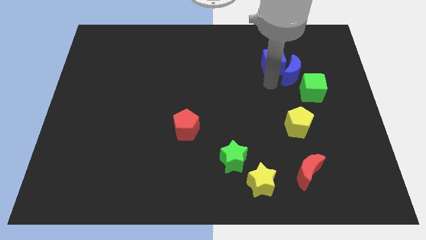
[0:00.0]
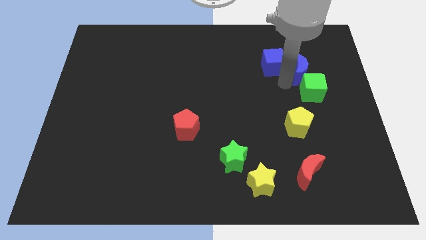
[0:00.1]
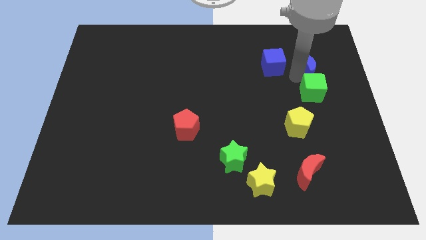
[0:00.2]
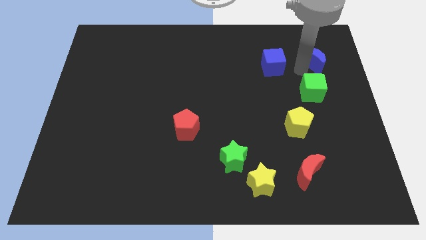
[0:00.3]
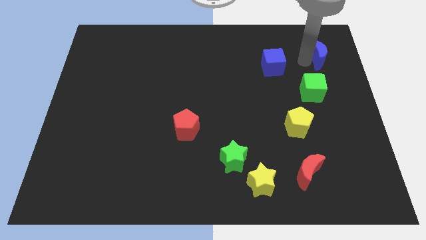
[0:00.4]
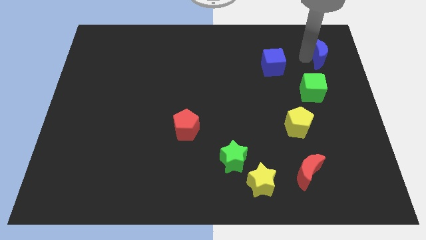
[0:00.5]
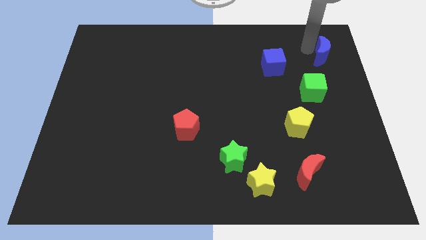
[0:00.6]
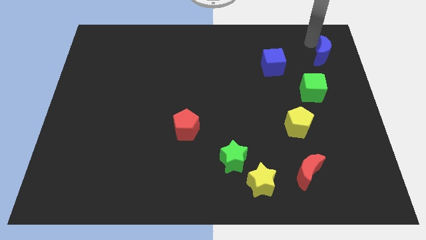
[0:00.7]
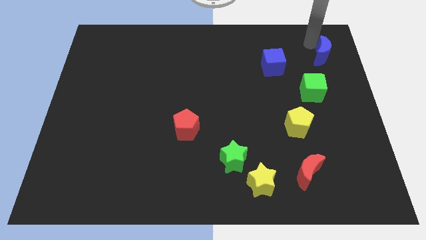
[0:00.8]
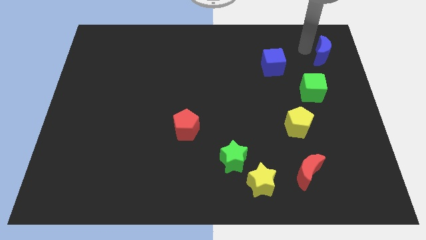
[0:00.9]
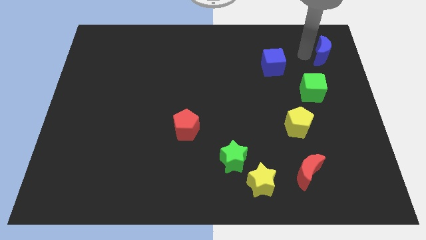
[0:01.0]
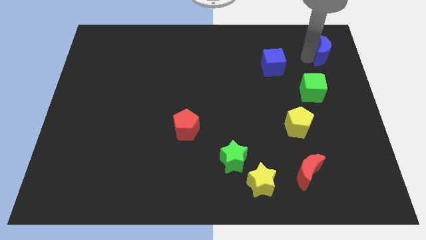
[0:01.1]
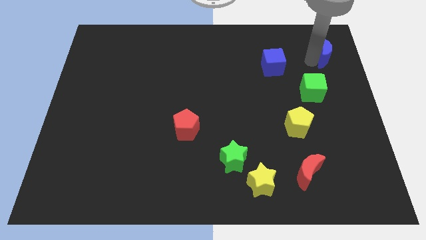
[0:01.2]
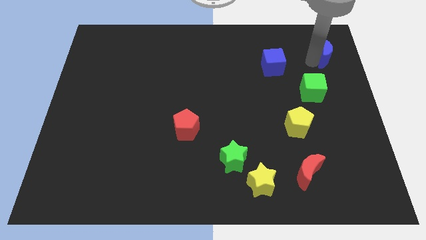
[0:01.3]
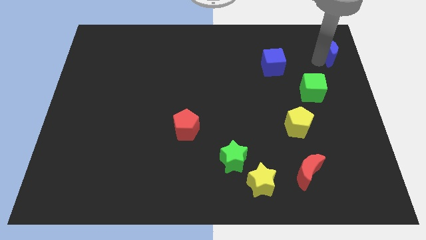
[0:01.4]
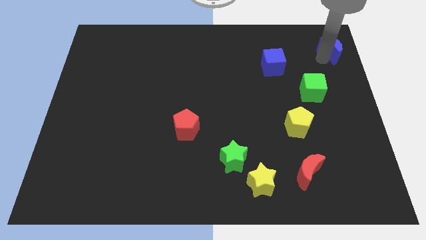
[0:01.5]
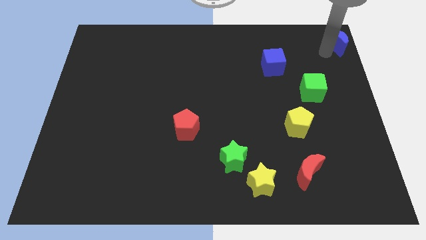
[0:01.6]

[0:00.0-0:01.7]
separate the blue moon from the blue cube

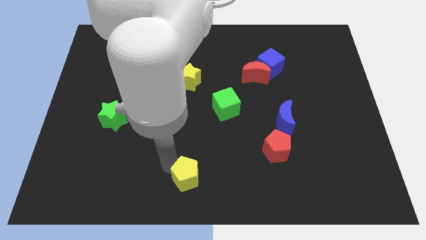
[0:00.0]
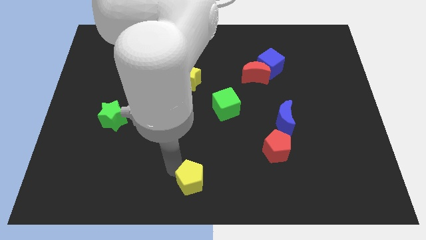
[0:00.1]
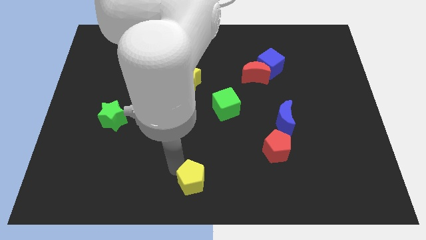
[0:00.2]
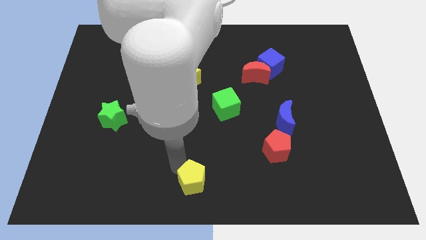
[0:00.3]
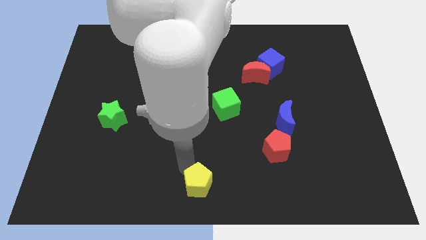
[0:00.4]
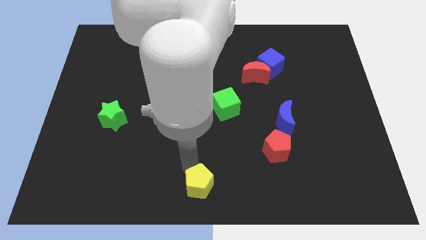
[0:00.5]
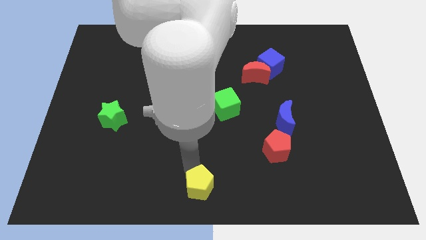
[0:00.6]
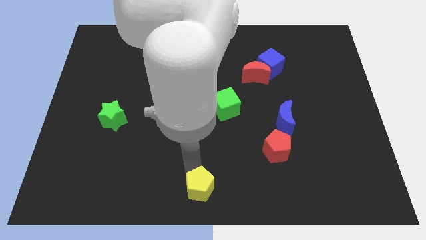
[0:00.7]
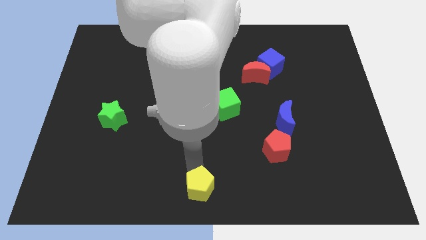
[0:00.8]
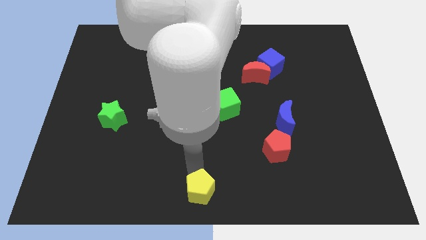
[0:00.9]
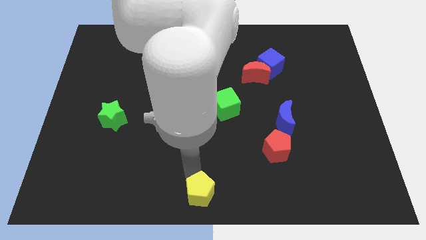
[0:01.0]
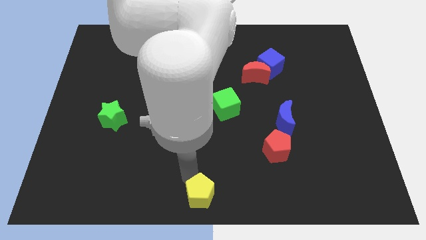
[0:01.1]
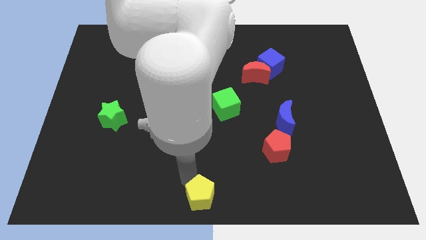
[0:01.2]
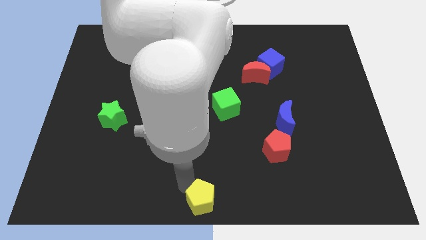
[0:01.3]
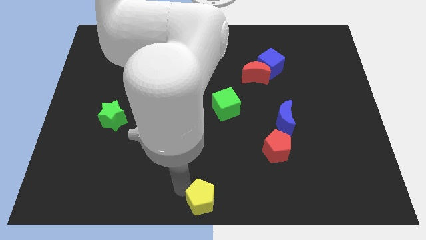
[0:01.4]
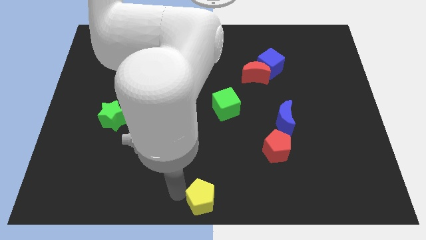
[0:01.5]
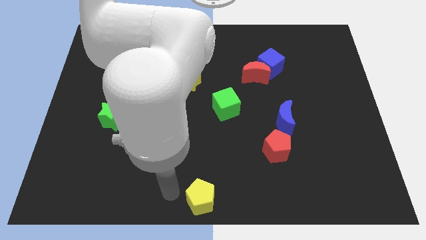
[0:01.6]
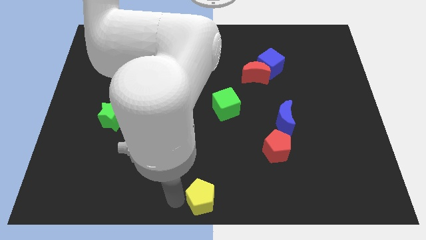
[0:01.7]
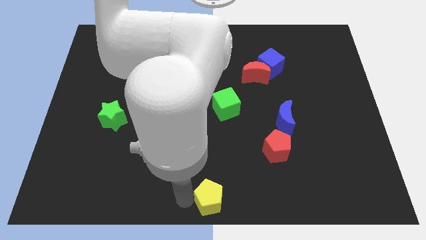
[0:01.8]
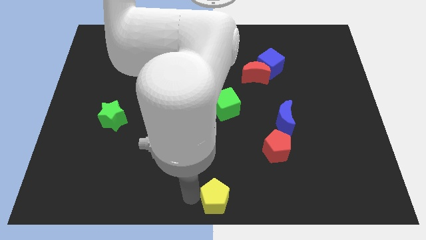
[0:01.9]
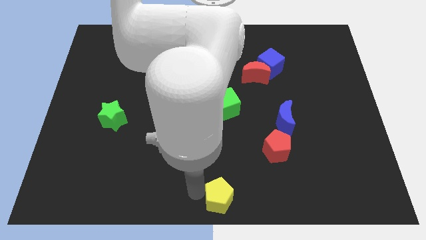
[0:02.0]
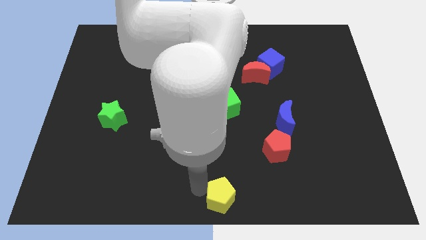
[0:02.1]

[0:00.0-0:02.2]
place the yellow pentagon at the bottom center of the board

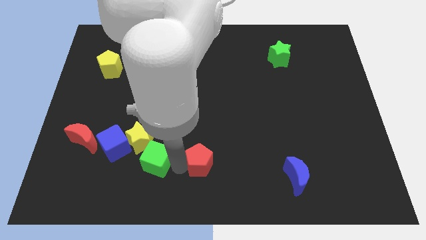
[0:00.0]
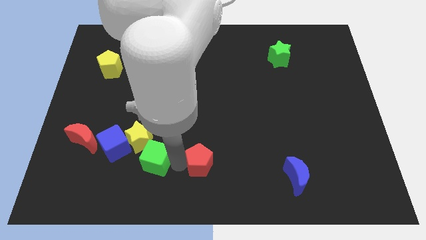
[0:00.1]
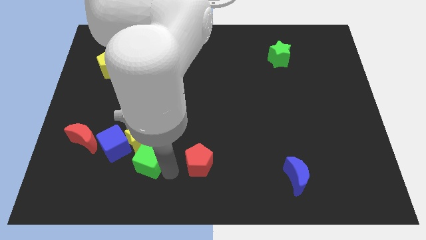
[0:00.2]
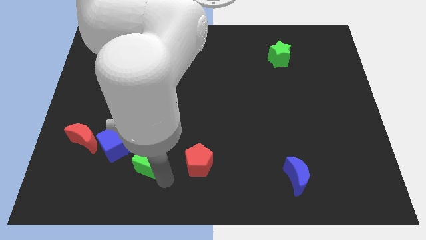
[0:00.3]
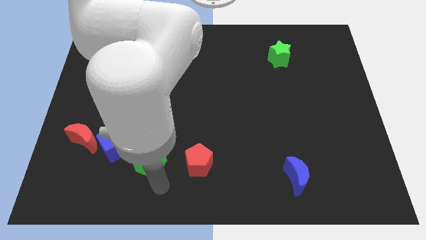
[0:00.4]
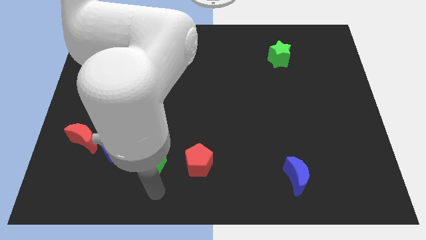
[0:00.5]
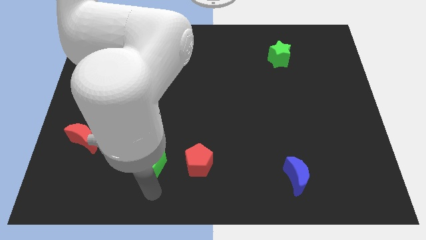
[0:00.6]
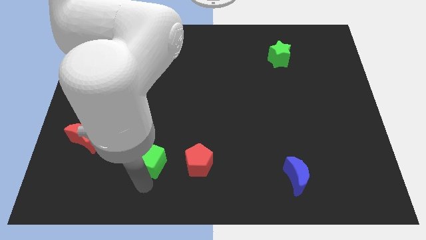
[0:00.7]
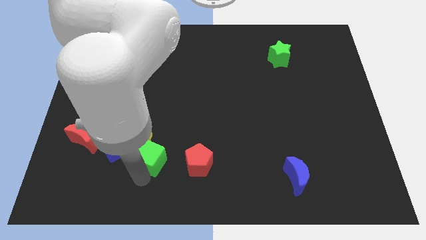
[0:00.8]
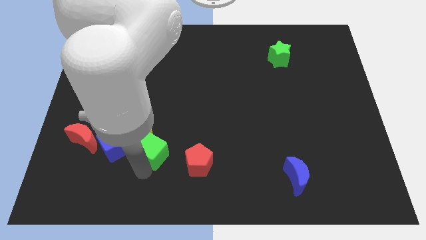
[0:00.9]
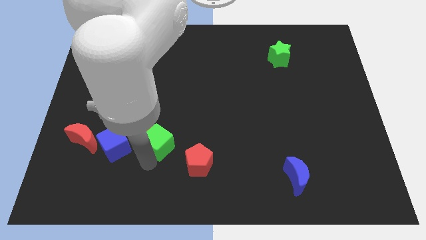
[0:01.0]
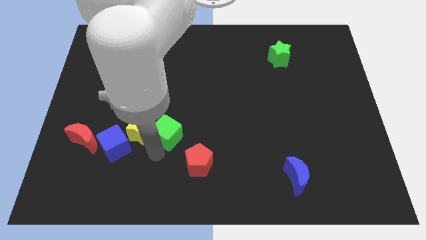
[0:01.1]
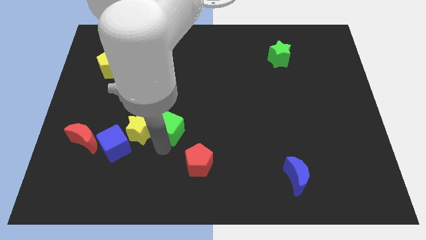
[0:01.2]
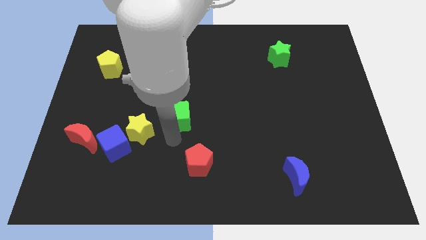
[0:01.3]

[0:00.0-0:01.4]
separate green cube from the red pentagon

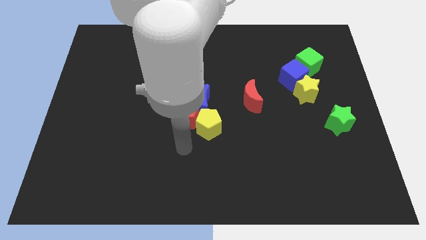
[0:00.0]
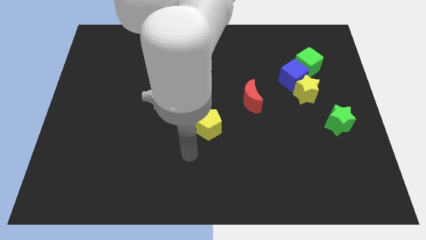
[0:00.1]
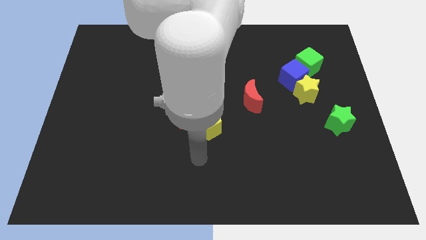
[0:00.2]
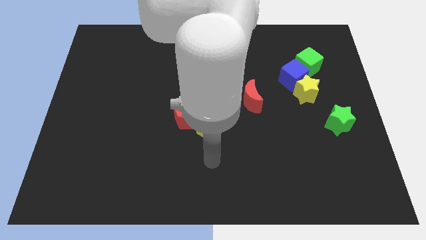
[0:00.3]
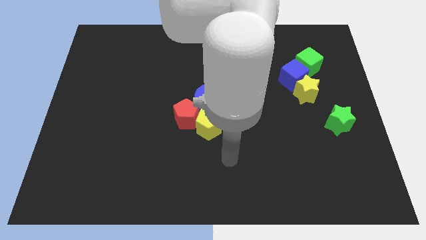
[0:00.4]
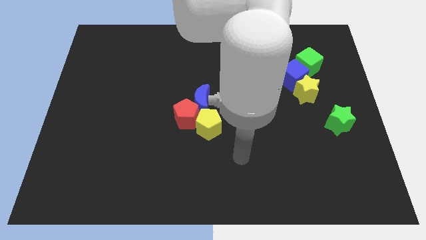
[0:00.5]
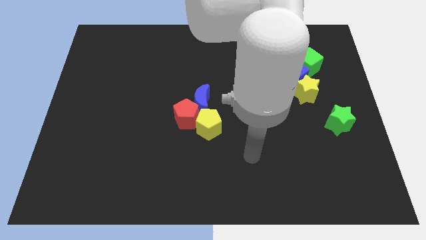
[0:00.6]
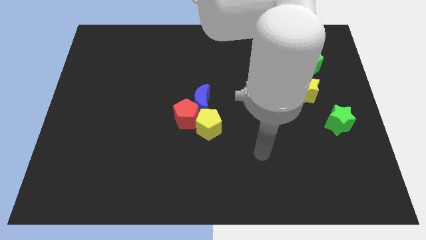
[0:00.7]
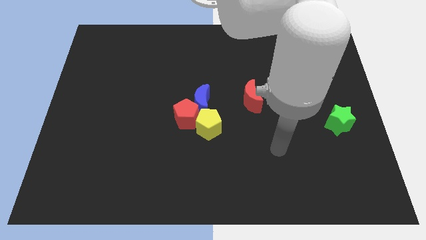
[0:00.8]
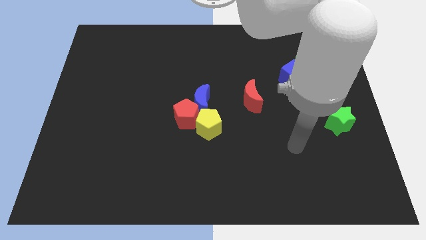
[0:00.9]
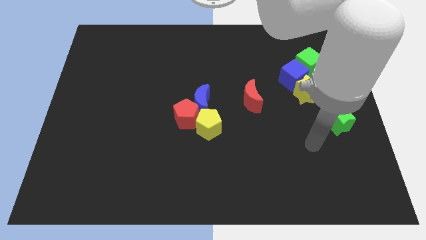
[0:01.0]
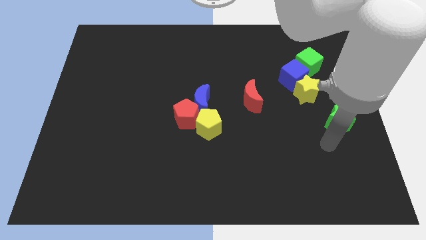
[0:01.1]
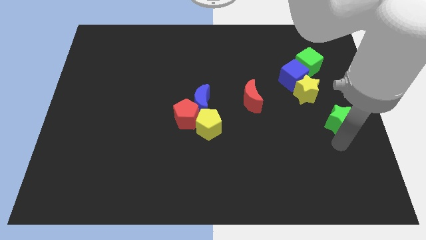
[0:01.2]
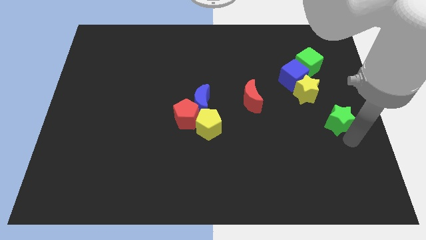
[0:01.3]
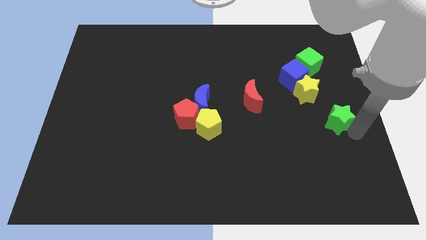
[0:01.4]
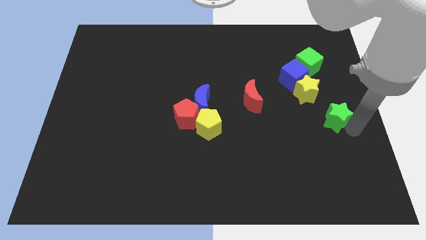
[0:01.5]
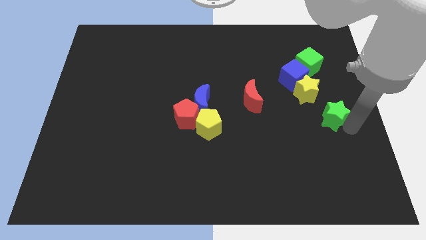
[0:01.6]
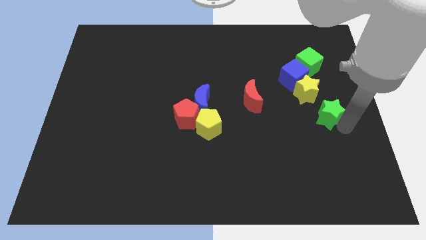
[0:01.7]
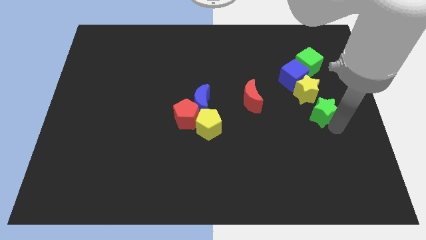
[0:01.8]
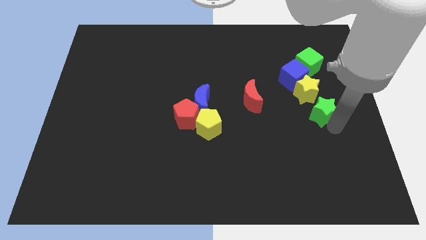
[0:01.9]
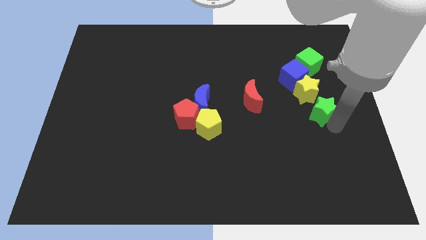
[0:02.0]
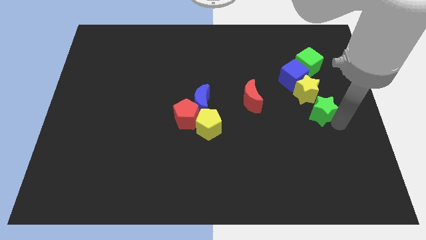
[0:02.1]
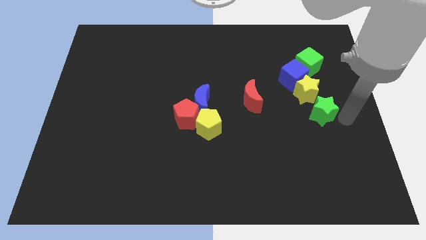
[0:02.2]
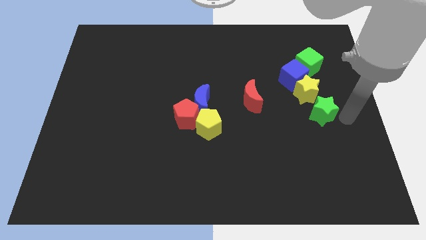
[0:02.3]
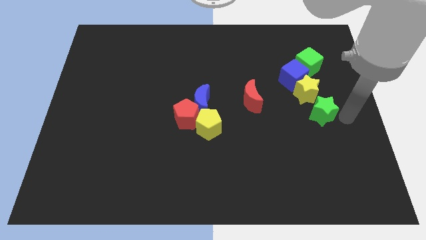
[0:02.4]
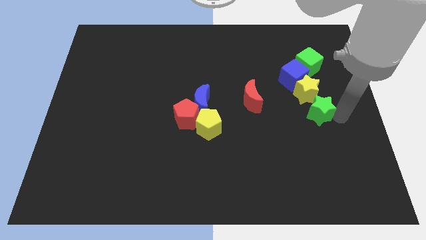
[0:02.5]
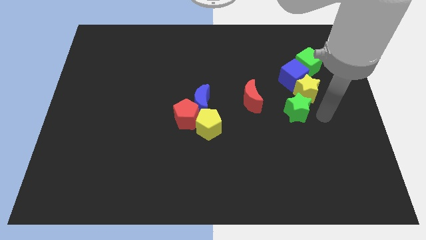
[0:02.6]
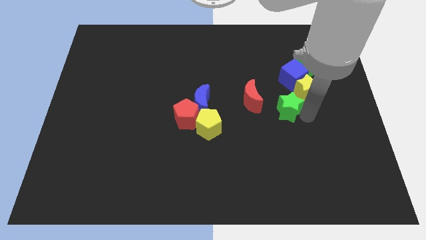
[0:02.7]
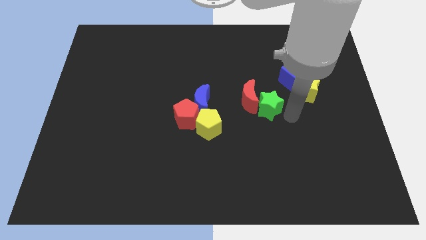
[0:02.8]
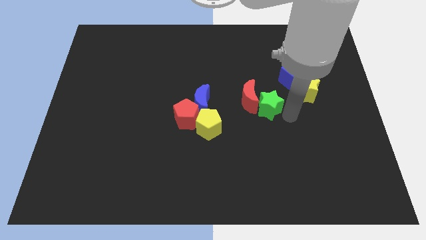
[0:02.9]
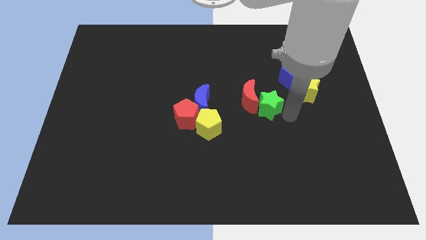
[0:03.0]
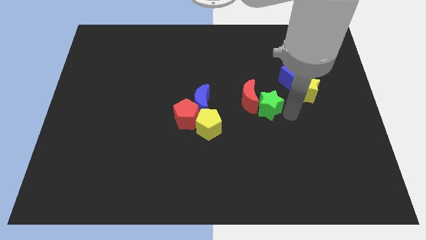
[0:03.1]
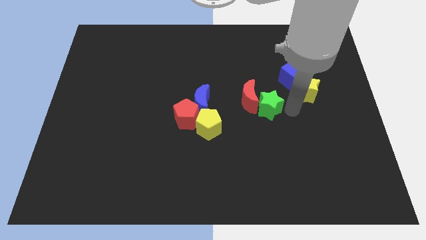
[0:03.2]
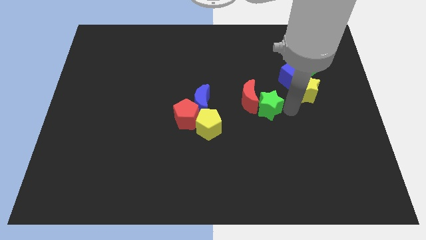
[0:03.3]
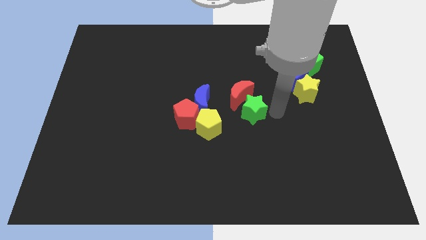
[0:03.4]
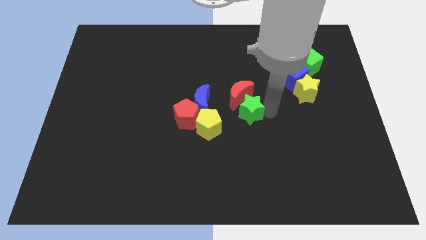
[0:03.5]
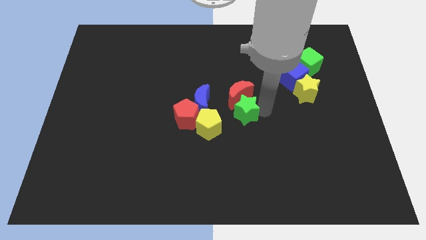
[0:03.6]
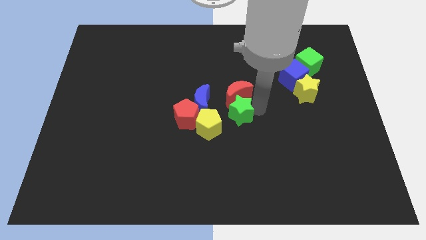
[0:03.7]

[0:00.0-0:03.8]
push the green star below the red crescent
